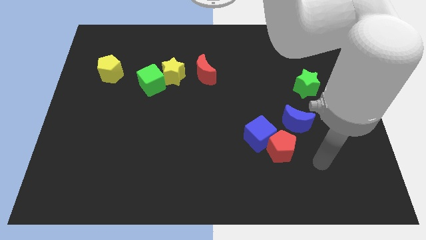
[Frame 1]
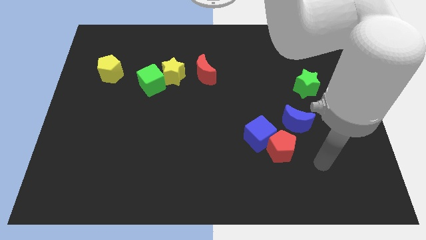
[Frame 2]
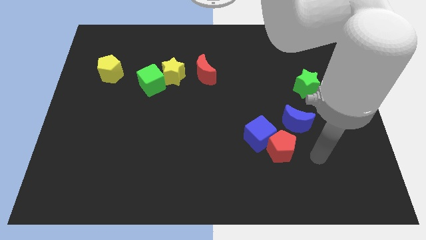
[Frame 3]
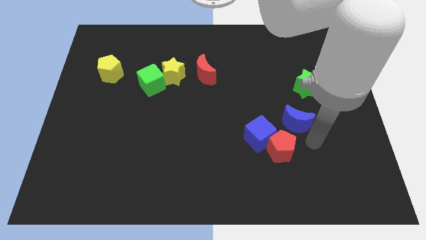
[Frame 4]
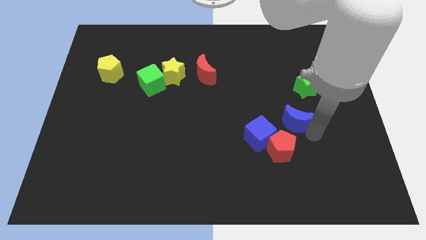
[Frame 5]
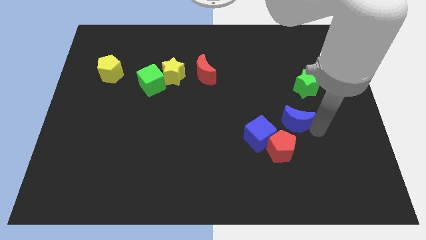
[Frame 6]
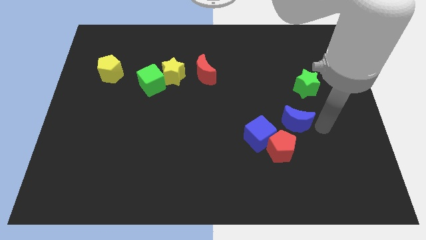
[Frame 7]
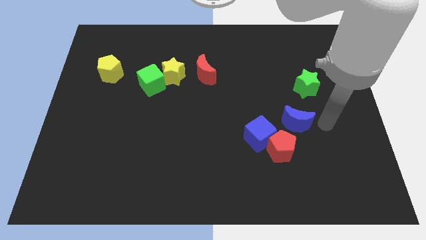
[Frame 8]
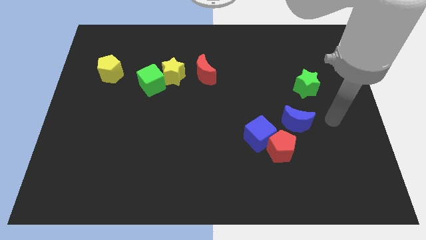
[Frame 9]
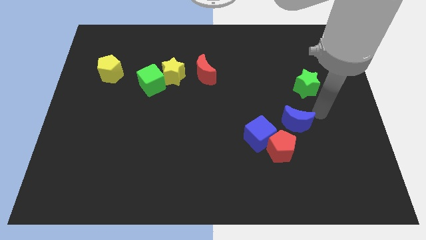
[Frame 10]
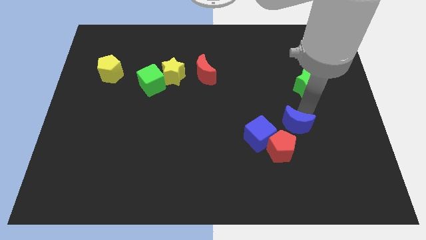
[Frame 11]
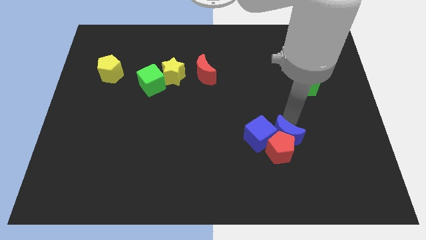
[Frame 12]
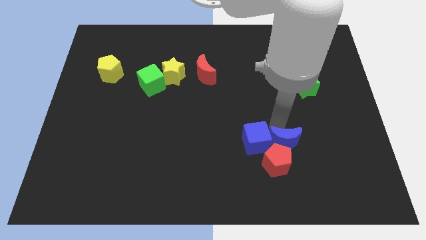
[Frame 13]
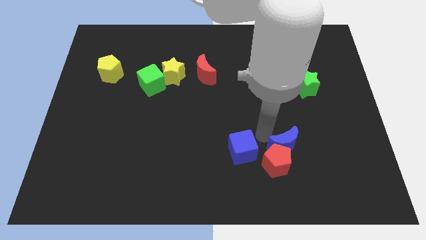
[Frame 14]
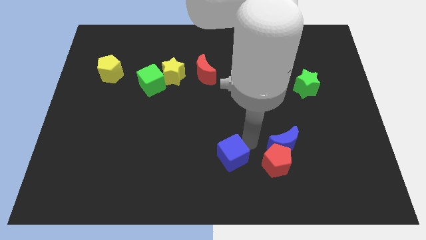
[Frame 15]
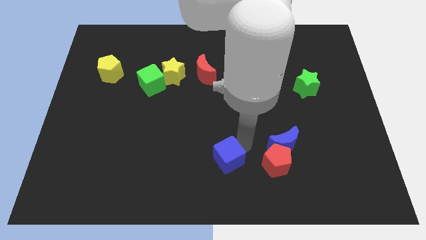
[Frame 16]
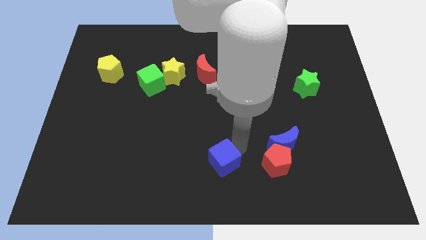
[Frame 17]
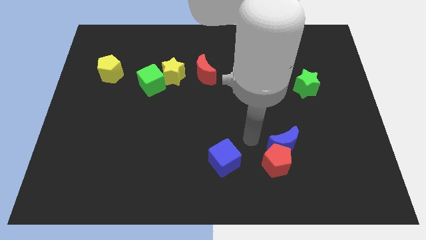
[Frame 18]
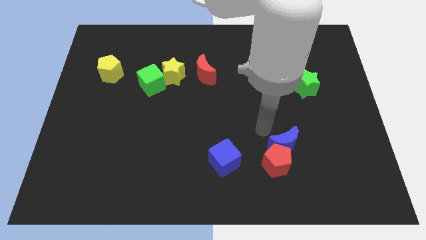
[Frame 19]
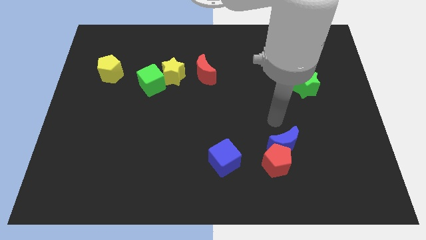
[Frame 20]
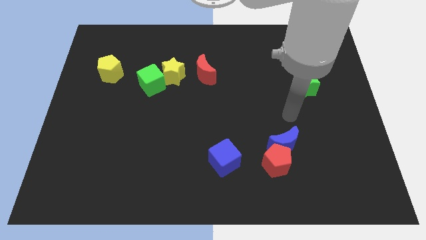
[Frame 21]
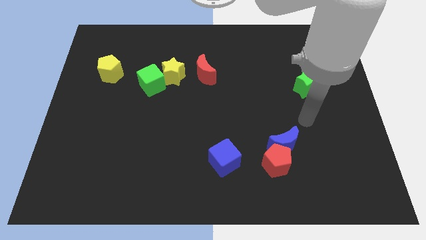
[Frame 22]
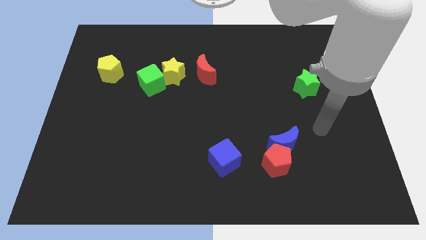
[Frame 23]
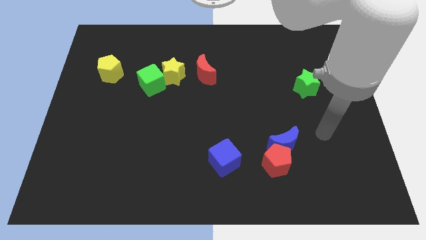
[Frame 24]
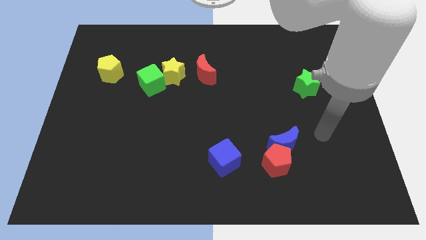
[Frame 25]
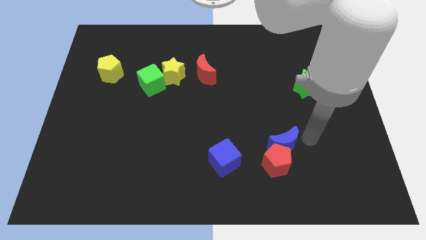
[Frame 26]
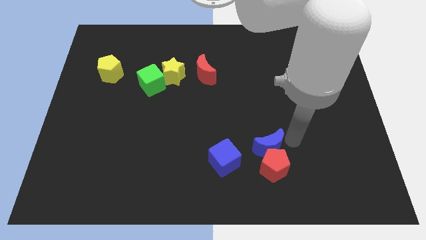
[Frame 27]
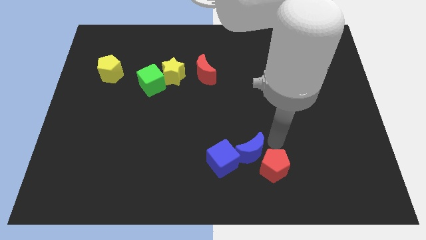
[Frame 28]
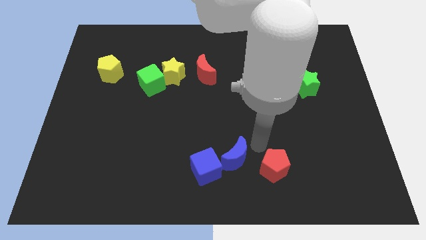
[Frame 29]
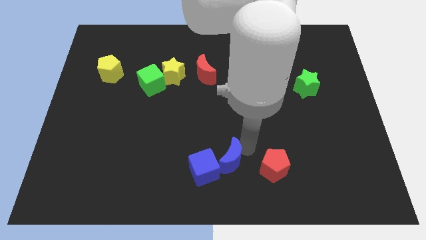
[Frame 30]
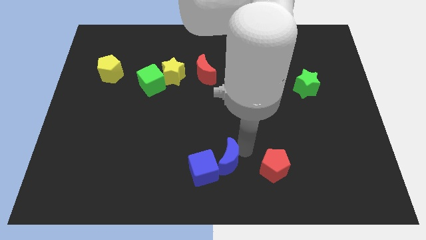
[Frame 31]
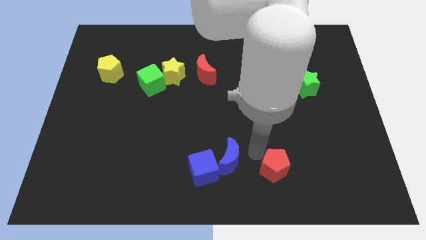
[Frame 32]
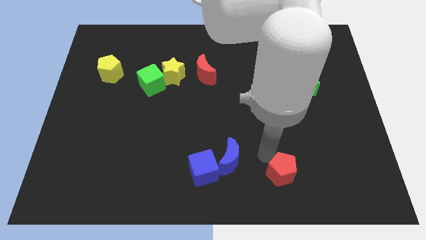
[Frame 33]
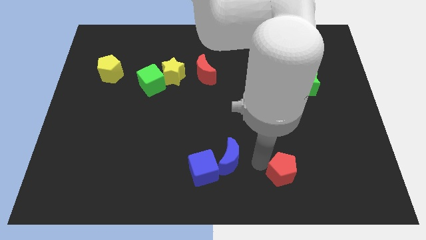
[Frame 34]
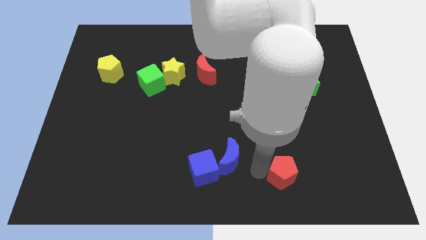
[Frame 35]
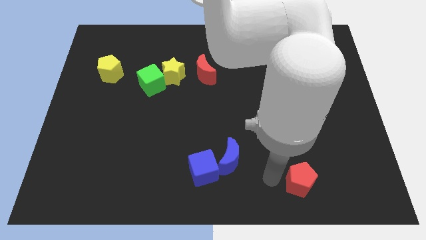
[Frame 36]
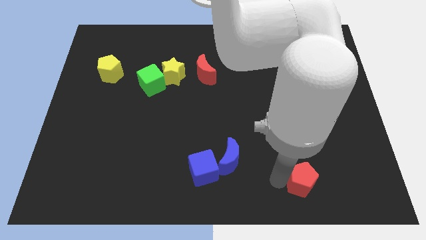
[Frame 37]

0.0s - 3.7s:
push the blue crescent into the blue cube

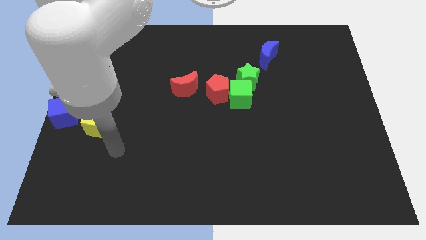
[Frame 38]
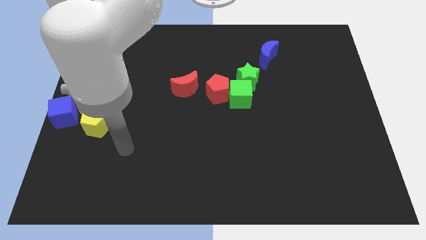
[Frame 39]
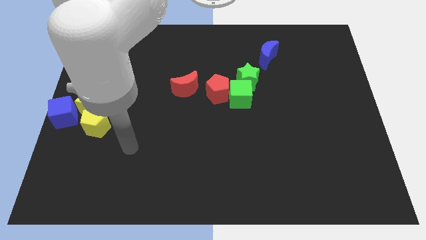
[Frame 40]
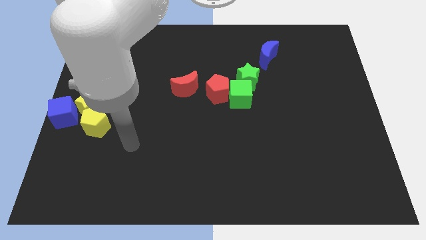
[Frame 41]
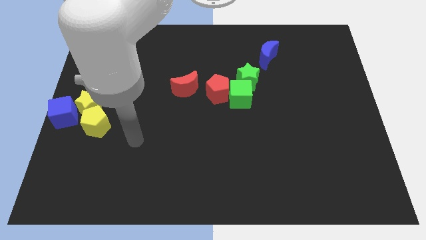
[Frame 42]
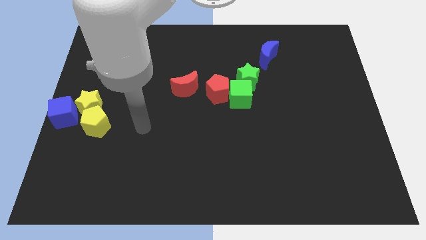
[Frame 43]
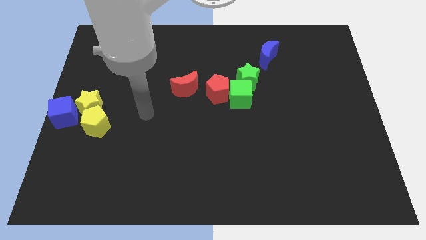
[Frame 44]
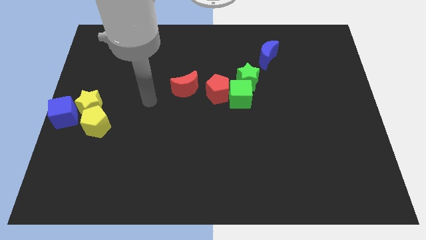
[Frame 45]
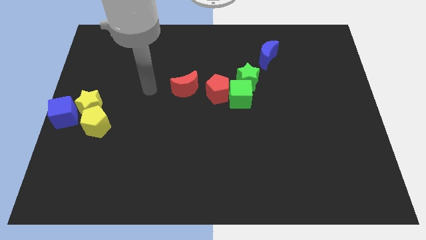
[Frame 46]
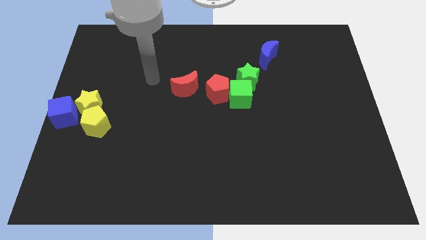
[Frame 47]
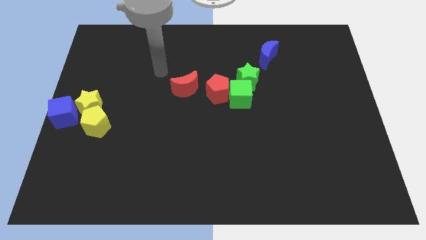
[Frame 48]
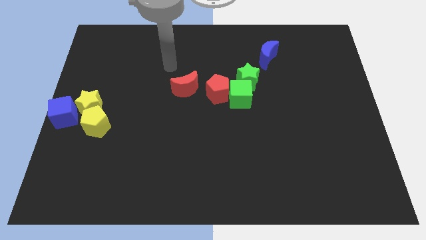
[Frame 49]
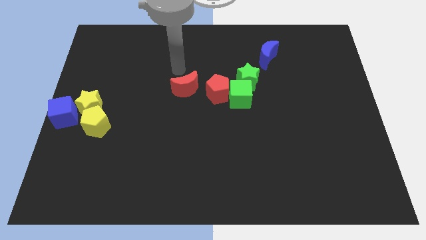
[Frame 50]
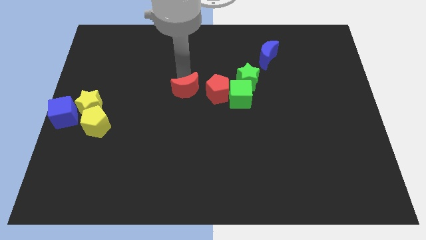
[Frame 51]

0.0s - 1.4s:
move your arm above to the red crescent

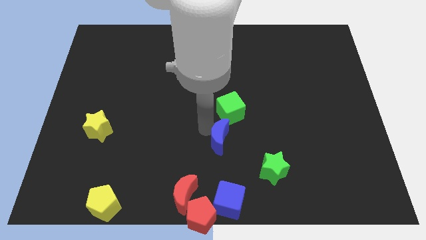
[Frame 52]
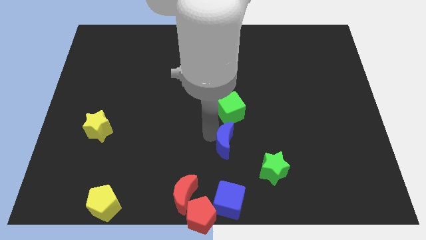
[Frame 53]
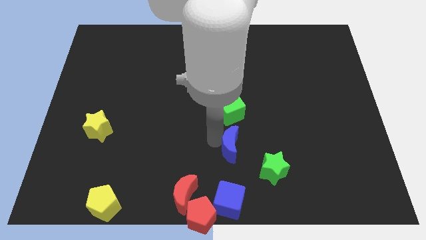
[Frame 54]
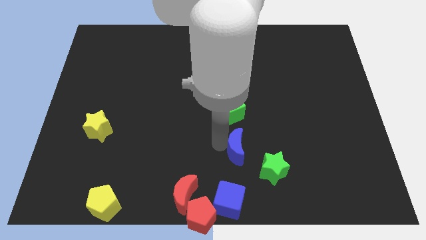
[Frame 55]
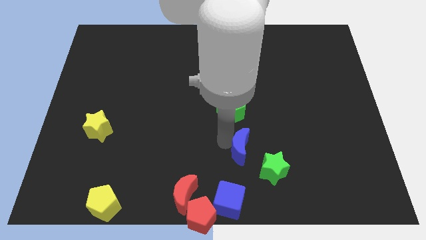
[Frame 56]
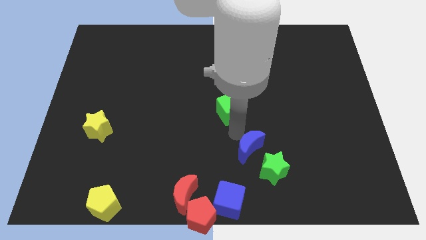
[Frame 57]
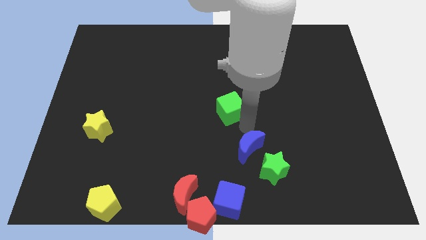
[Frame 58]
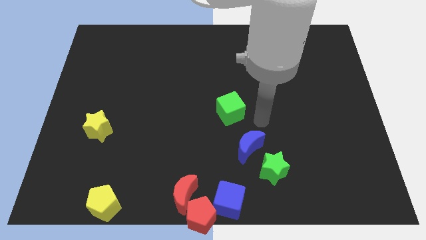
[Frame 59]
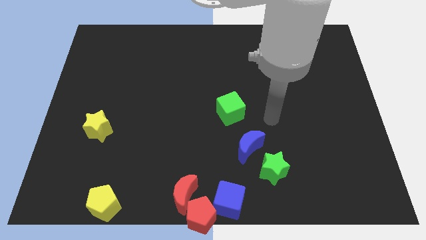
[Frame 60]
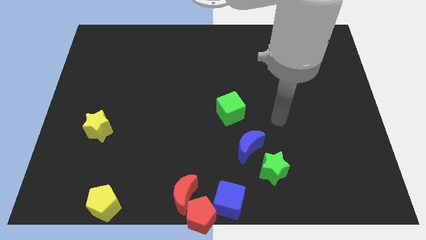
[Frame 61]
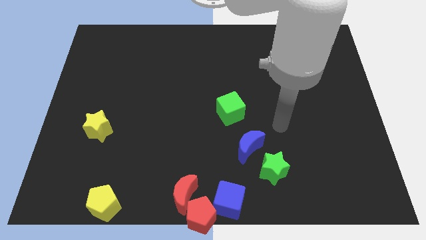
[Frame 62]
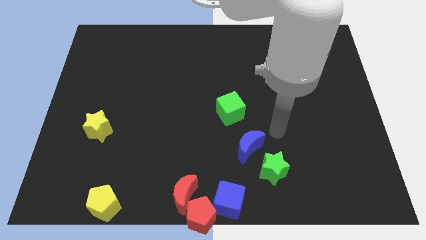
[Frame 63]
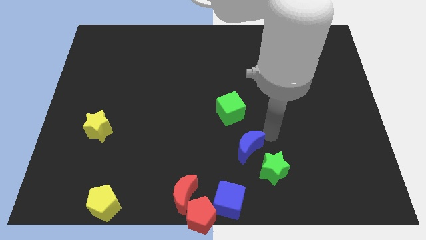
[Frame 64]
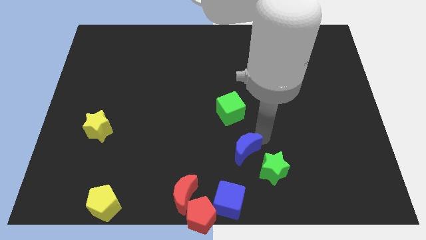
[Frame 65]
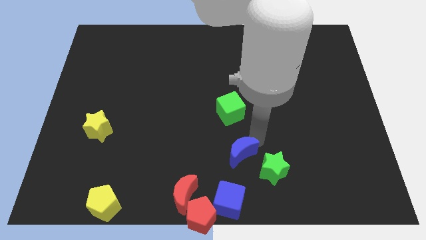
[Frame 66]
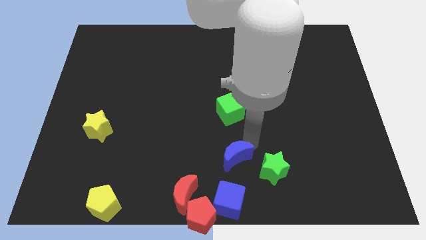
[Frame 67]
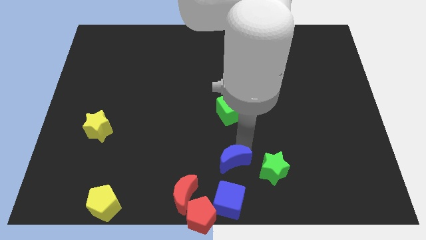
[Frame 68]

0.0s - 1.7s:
place the blue crescent vertically above the blue cube

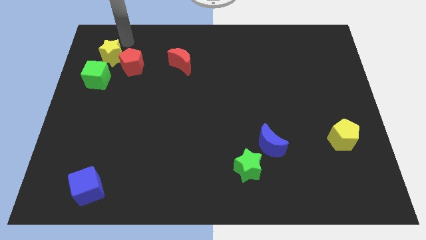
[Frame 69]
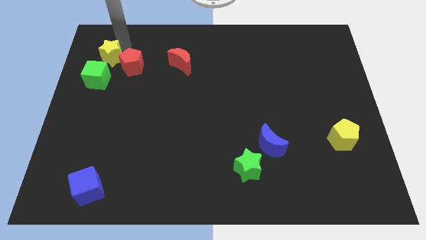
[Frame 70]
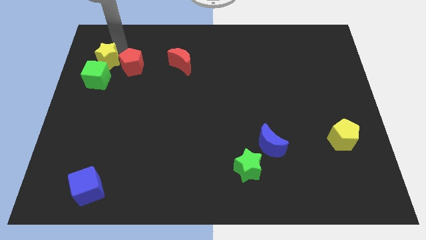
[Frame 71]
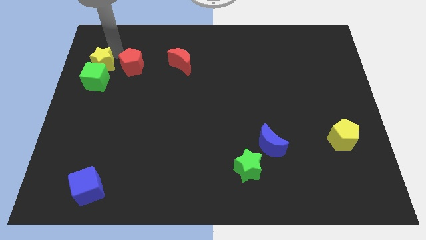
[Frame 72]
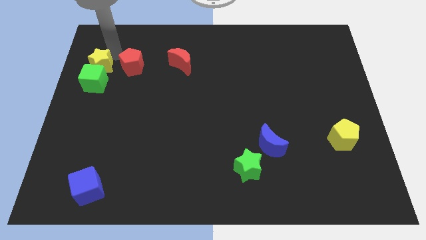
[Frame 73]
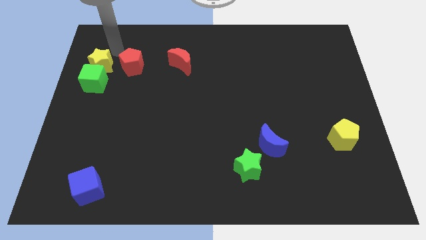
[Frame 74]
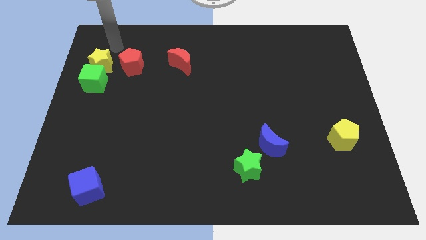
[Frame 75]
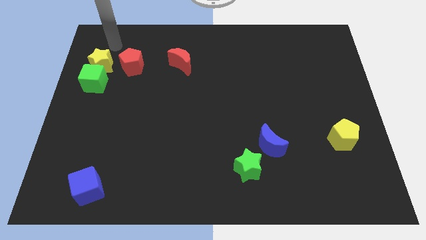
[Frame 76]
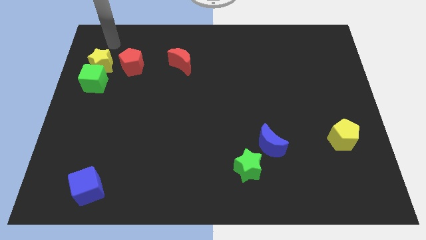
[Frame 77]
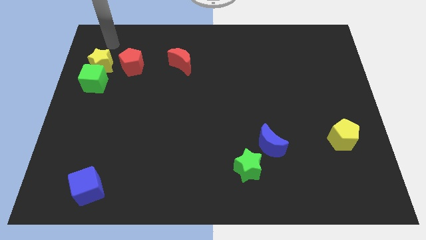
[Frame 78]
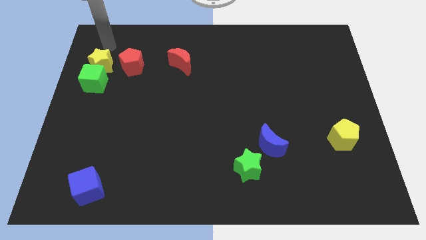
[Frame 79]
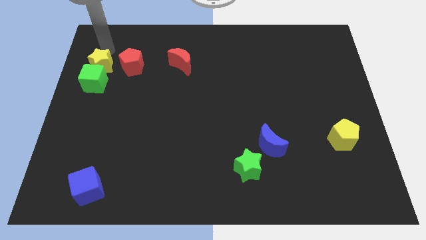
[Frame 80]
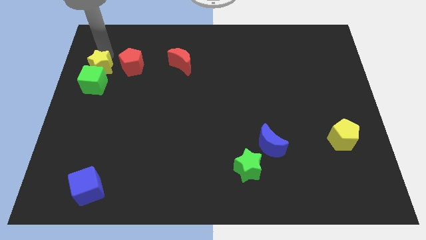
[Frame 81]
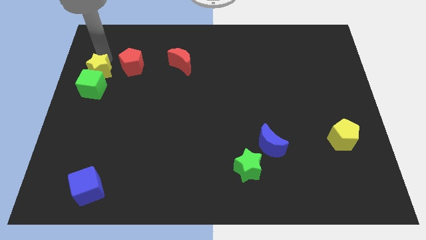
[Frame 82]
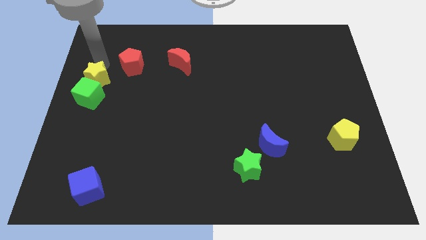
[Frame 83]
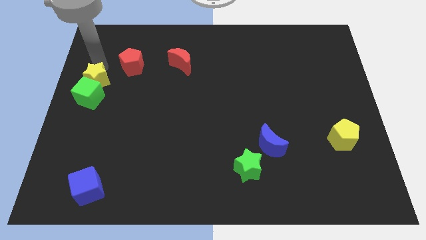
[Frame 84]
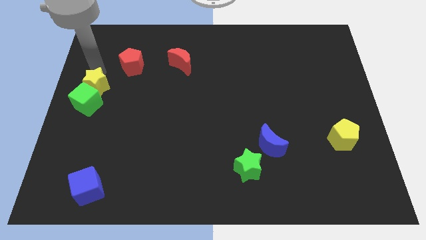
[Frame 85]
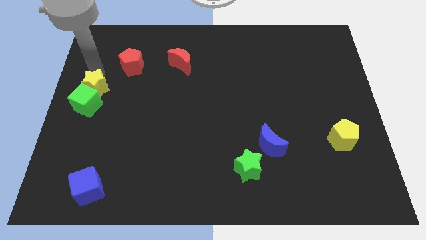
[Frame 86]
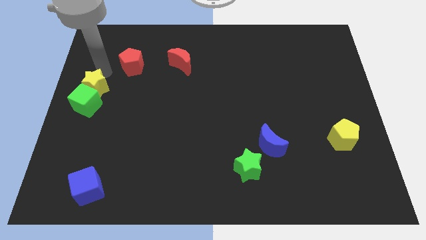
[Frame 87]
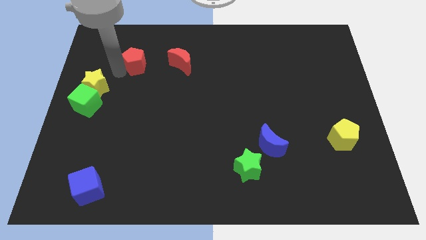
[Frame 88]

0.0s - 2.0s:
push the green cube with the yellow star
